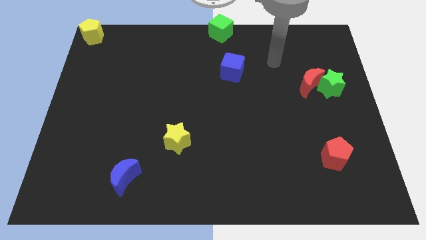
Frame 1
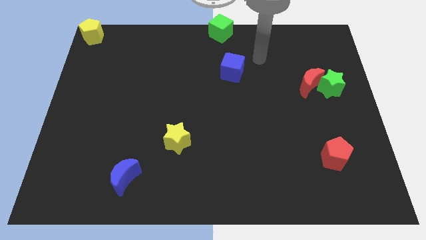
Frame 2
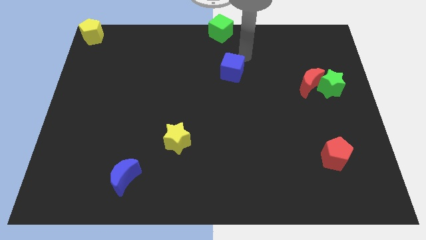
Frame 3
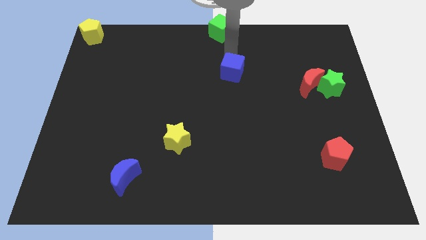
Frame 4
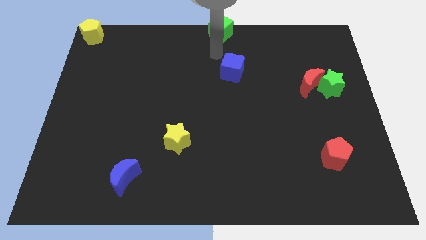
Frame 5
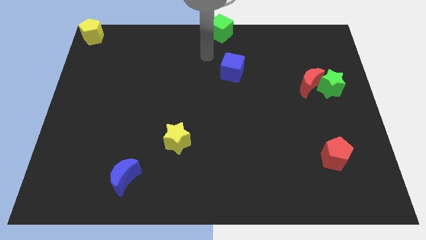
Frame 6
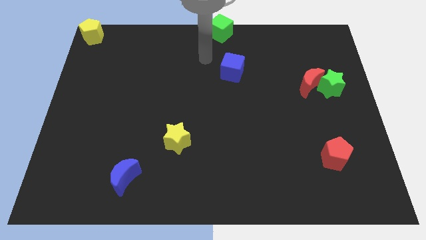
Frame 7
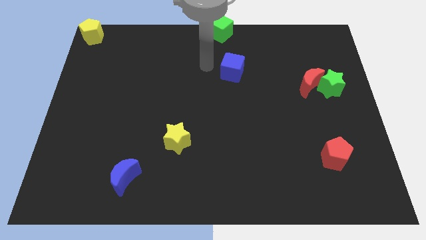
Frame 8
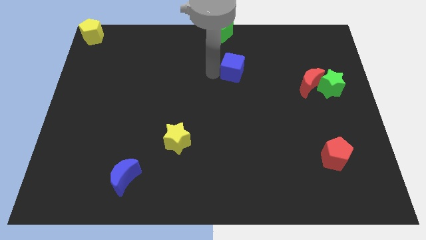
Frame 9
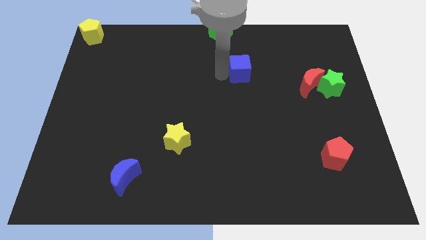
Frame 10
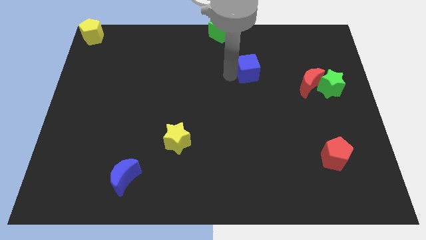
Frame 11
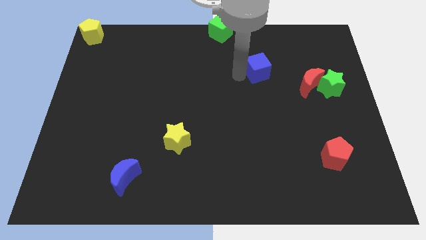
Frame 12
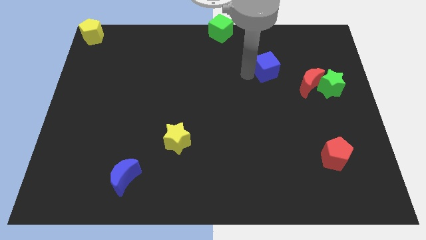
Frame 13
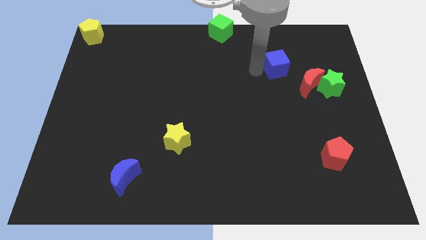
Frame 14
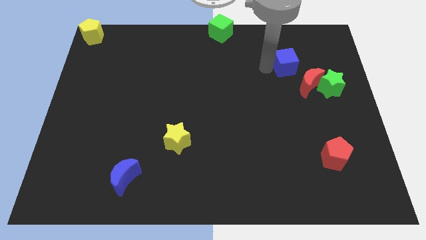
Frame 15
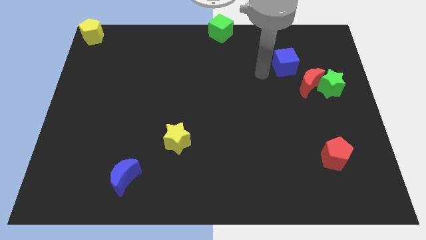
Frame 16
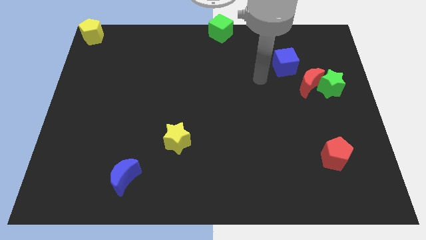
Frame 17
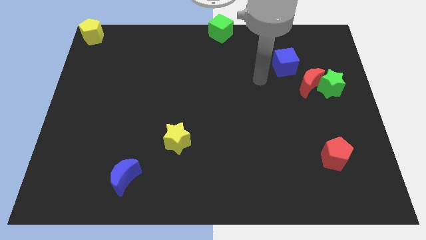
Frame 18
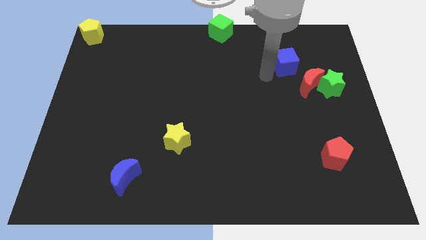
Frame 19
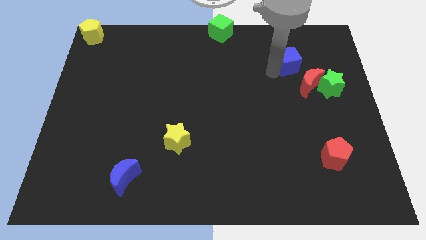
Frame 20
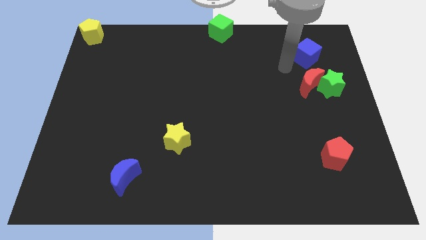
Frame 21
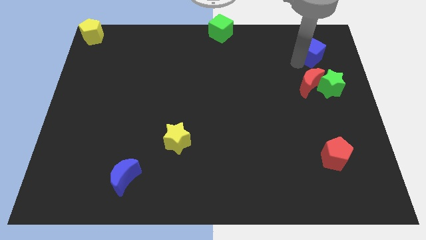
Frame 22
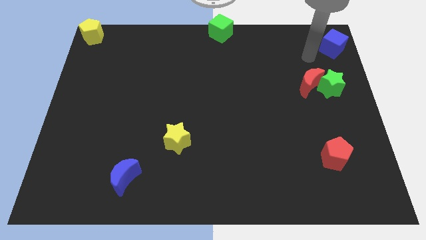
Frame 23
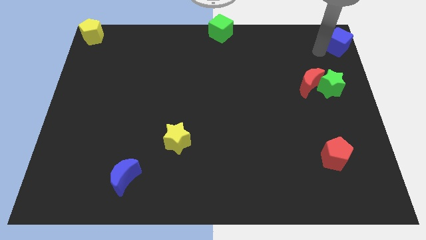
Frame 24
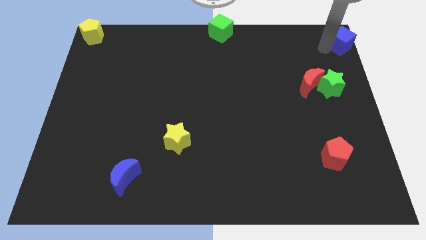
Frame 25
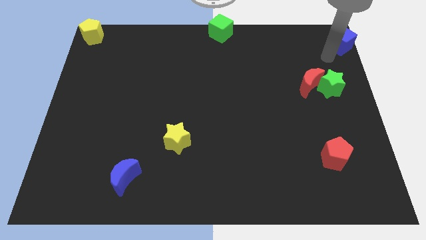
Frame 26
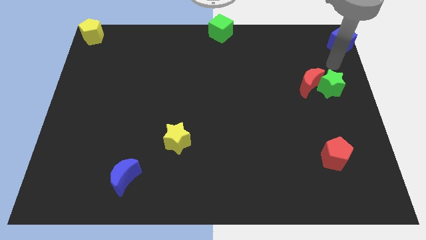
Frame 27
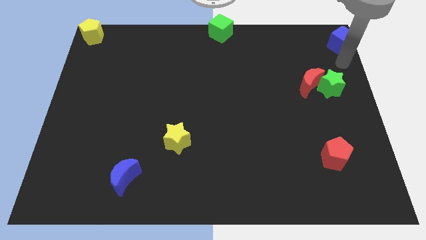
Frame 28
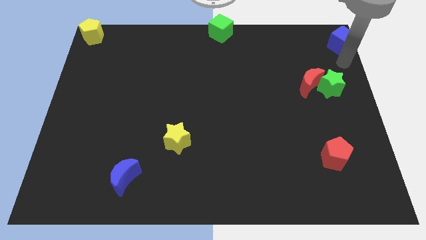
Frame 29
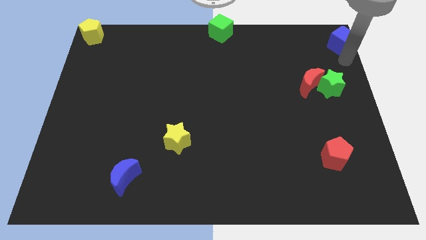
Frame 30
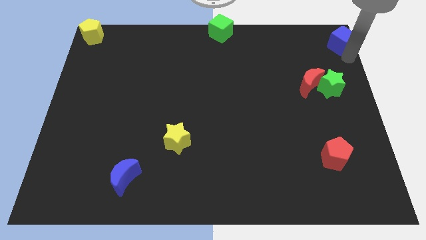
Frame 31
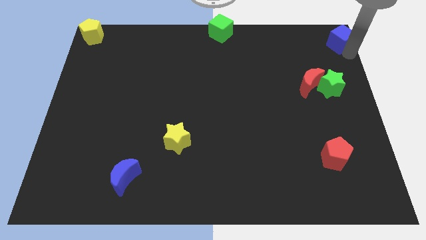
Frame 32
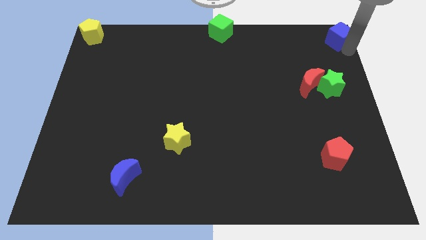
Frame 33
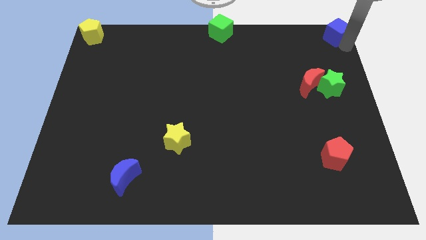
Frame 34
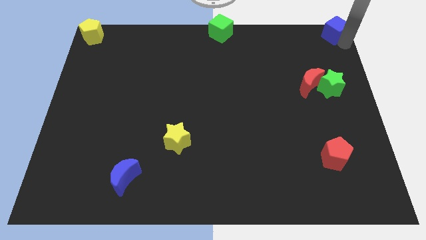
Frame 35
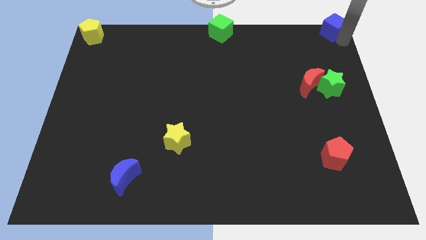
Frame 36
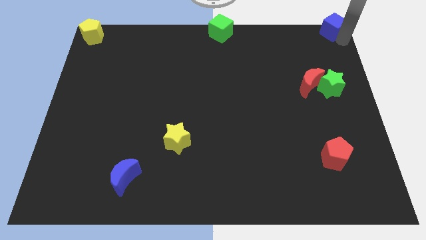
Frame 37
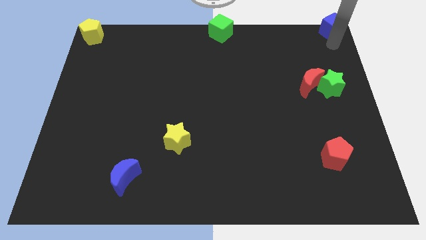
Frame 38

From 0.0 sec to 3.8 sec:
move the blue to the top right corner of the table

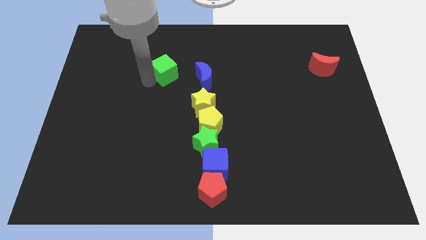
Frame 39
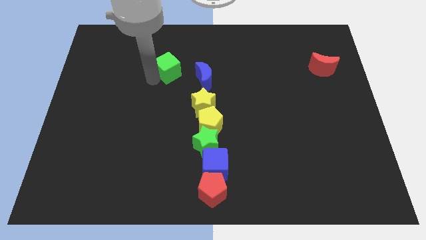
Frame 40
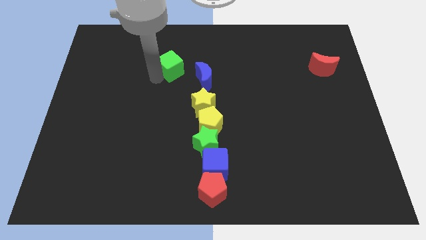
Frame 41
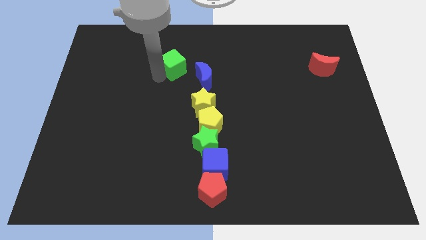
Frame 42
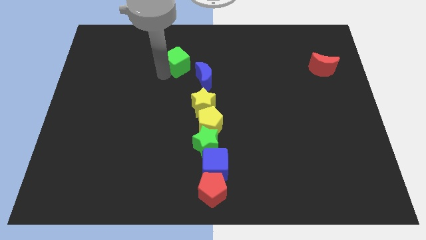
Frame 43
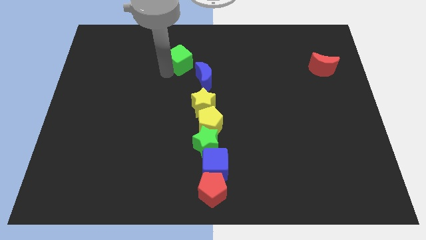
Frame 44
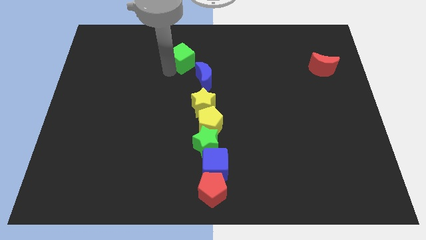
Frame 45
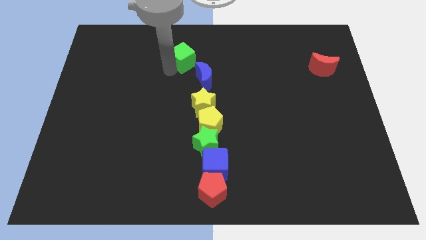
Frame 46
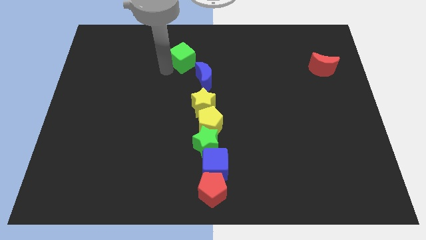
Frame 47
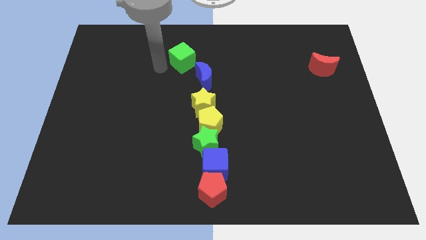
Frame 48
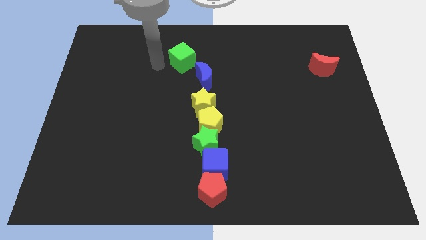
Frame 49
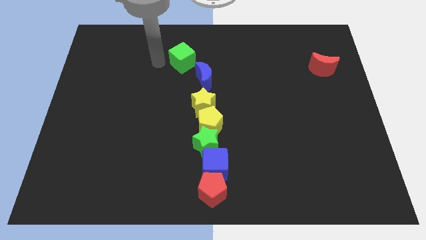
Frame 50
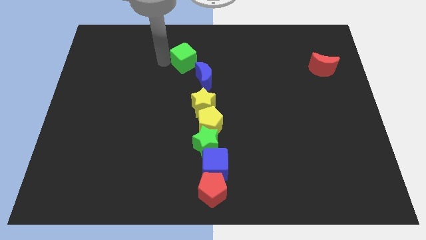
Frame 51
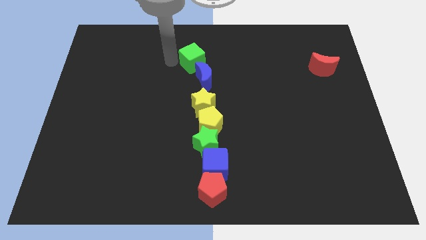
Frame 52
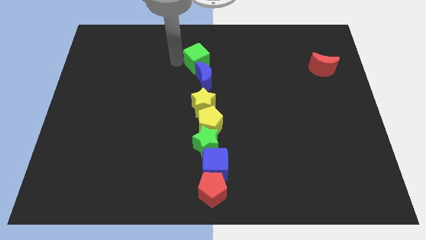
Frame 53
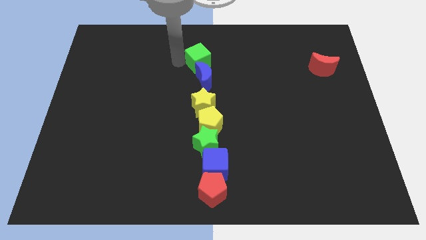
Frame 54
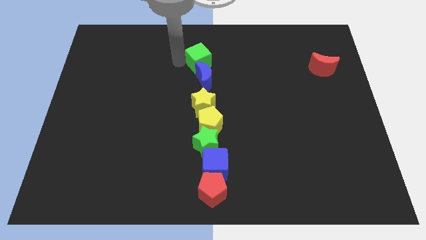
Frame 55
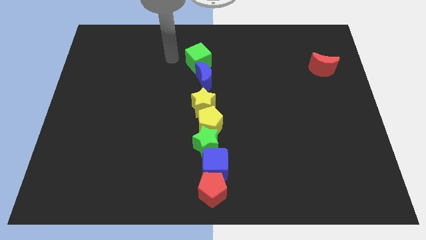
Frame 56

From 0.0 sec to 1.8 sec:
slide the green cube to the top of blue crescent

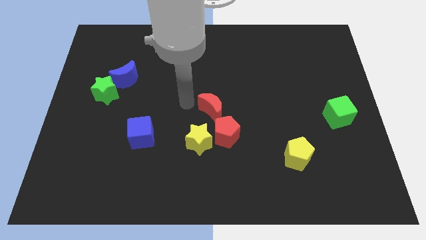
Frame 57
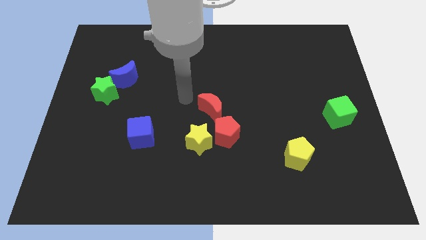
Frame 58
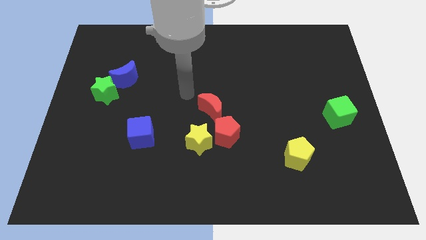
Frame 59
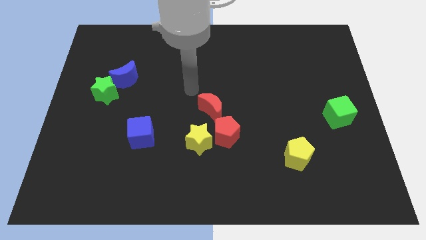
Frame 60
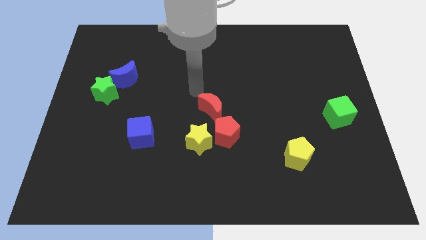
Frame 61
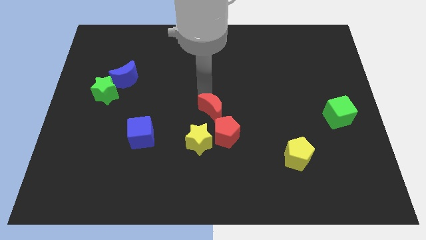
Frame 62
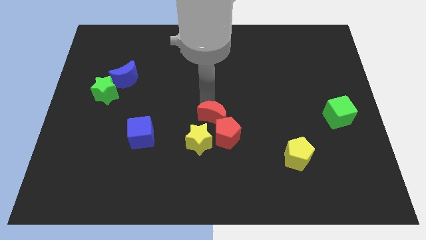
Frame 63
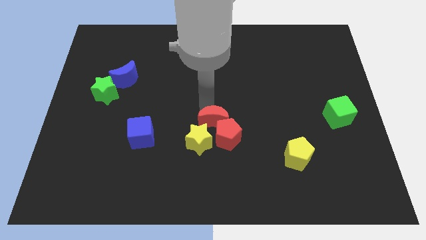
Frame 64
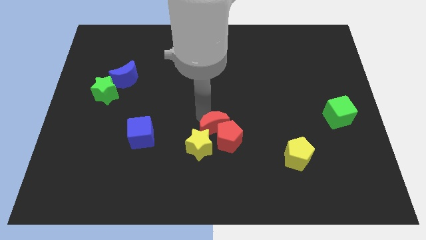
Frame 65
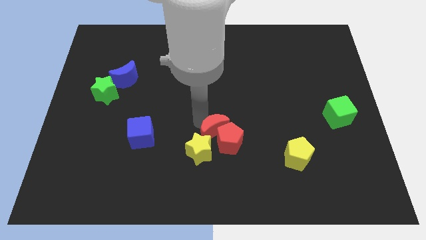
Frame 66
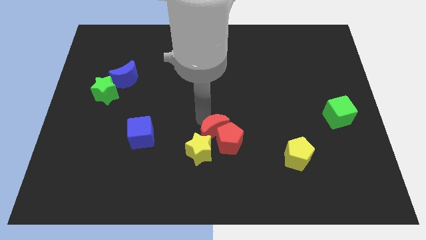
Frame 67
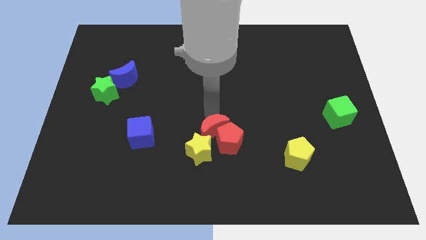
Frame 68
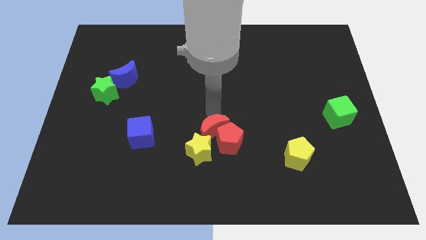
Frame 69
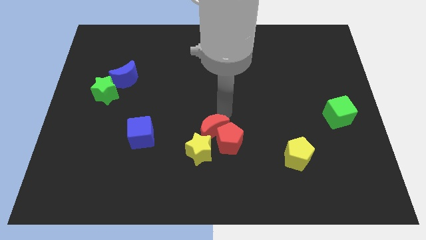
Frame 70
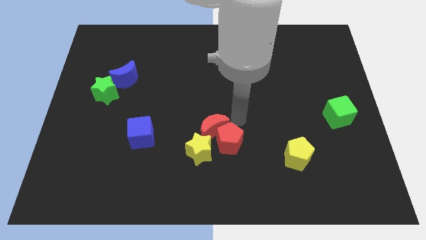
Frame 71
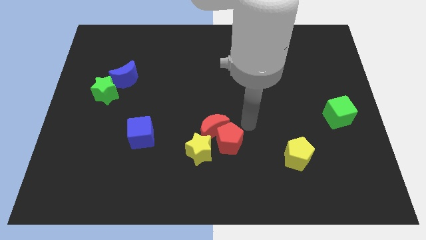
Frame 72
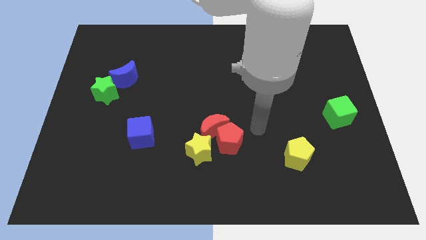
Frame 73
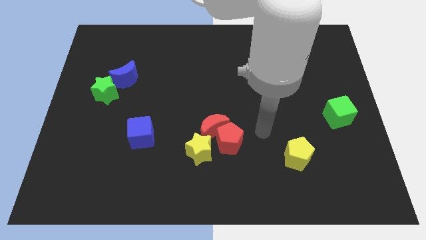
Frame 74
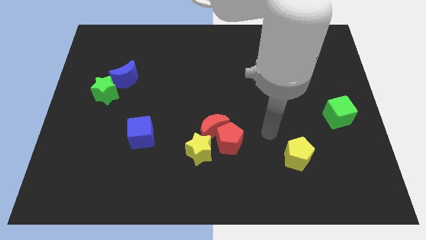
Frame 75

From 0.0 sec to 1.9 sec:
move the red half moon into the yellow star

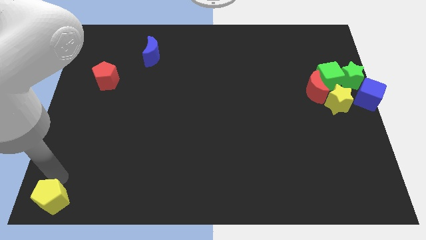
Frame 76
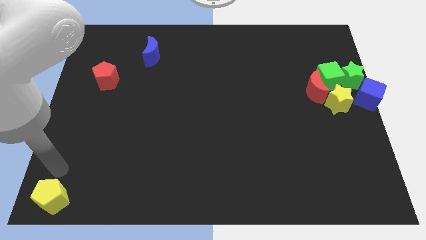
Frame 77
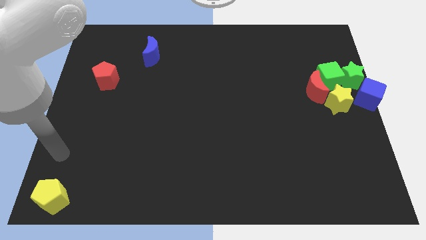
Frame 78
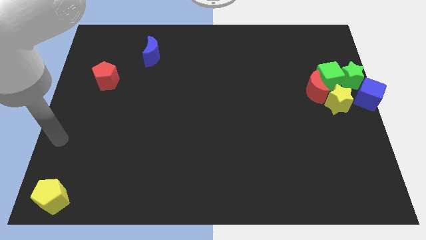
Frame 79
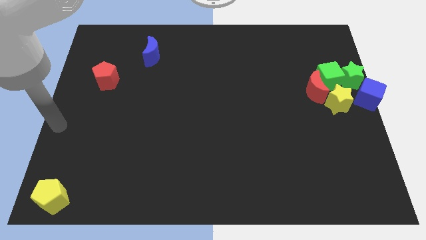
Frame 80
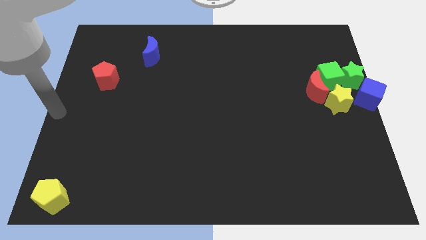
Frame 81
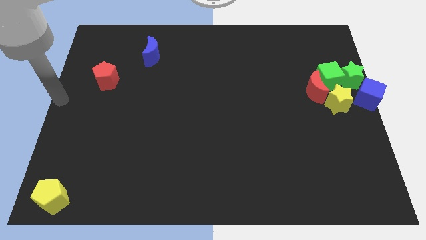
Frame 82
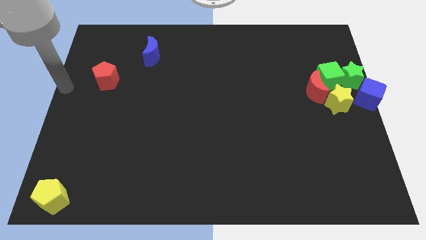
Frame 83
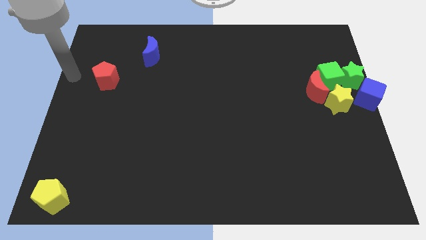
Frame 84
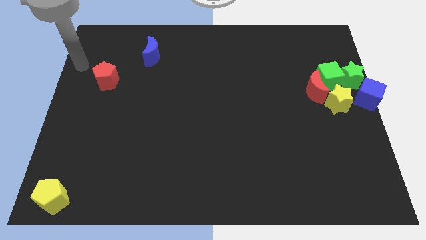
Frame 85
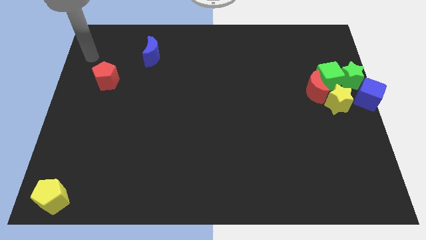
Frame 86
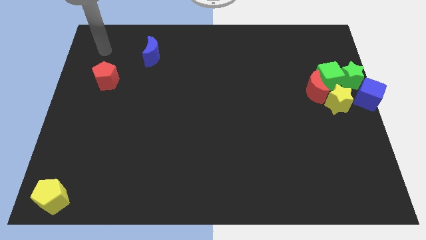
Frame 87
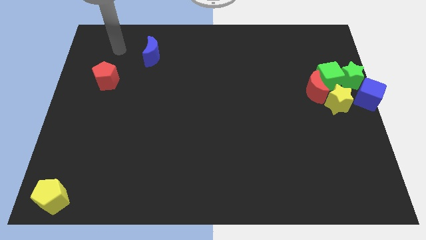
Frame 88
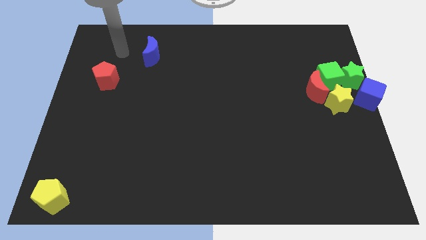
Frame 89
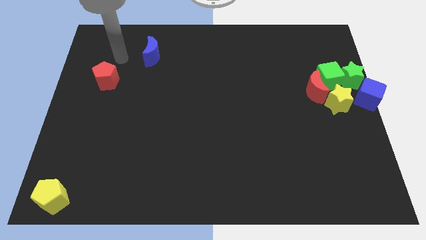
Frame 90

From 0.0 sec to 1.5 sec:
move your arm to the left of the blue crescent
